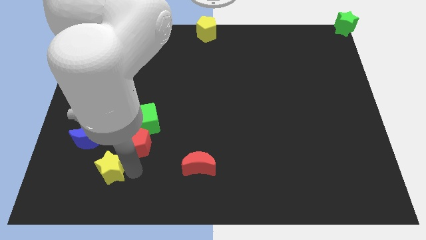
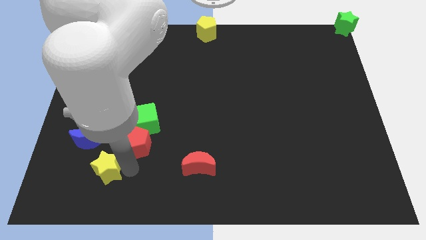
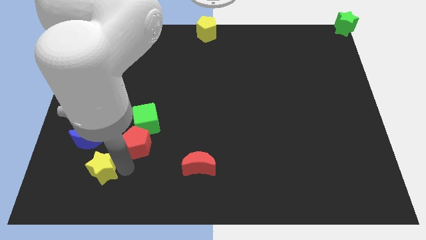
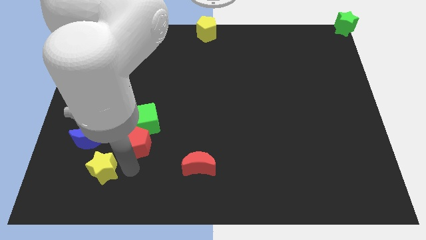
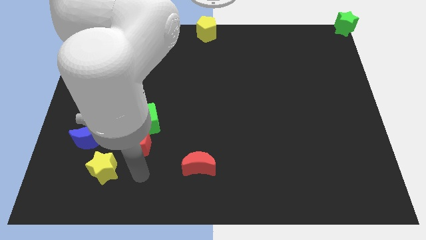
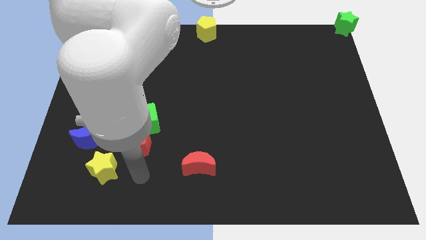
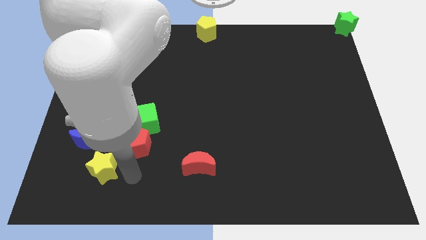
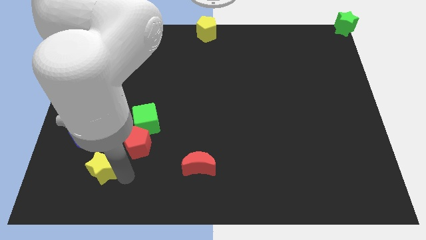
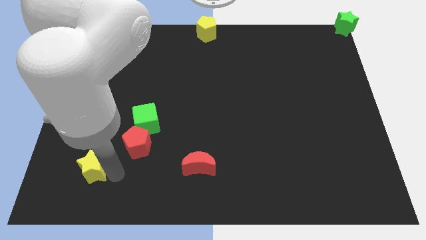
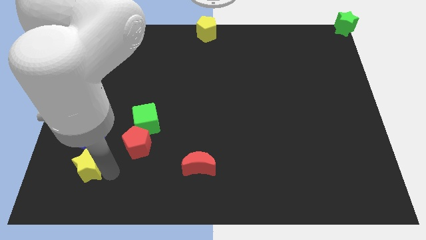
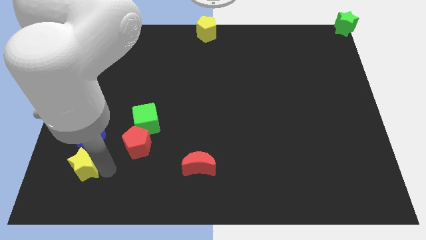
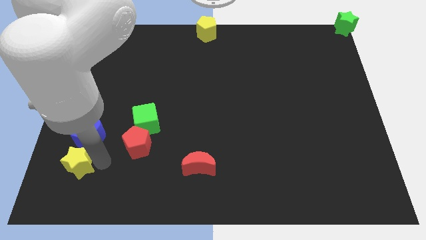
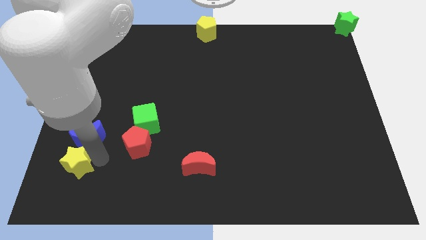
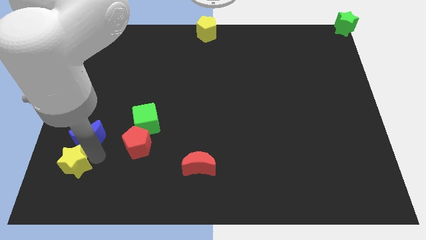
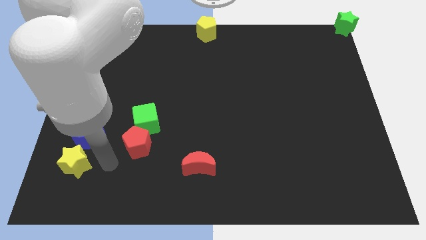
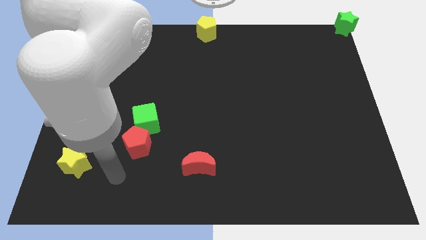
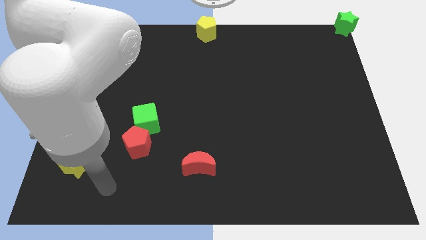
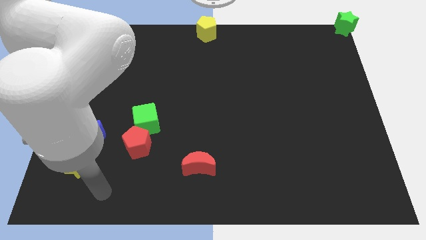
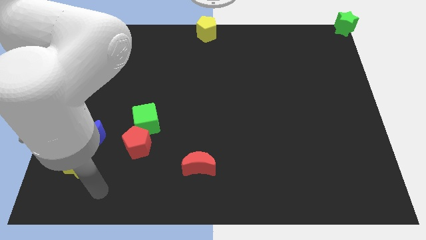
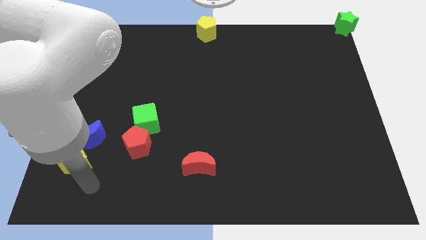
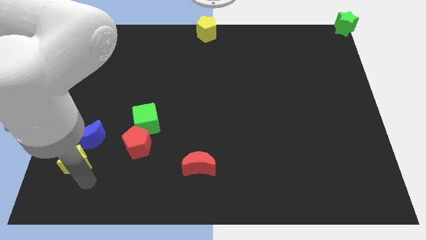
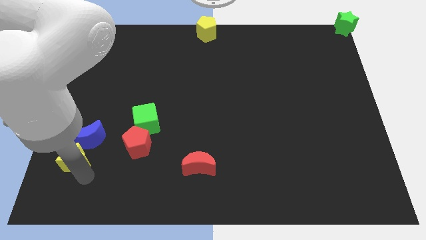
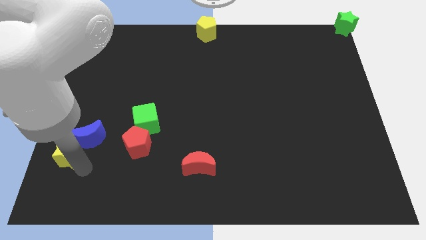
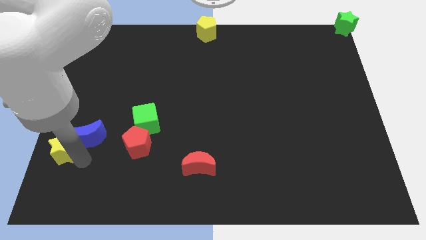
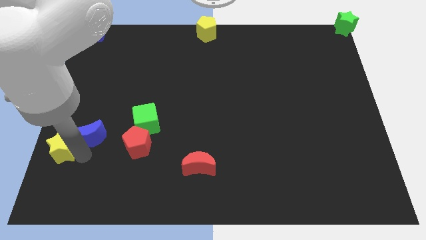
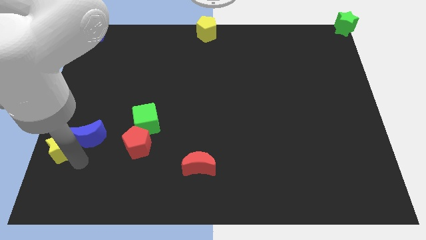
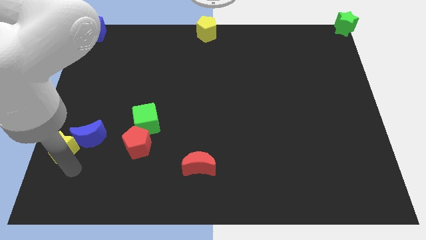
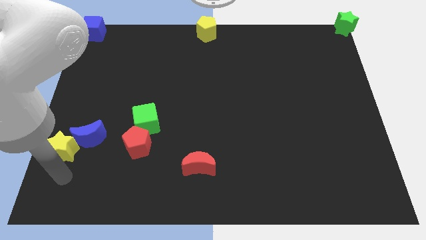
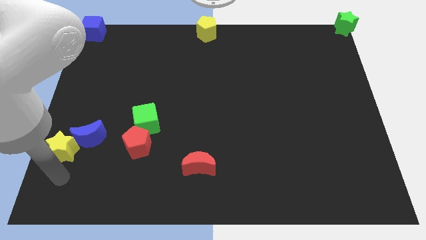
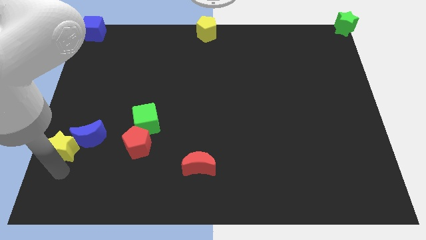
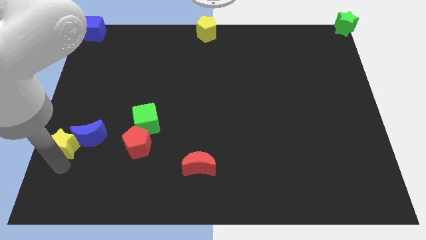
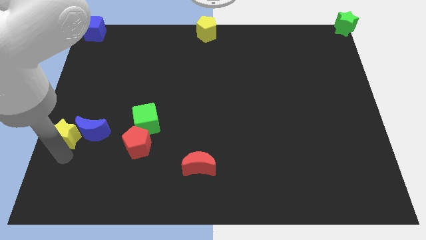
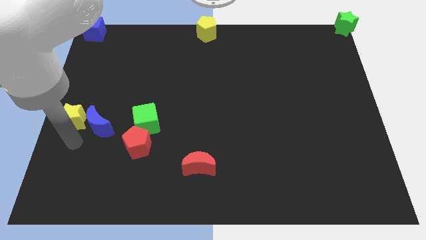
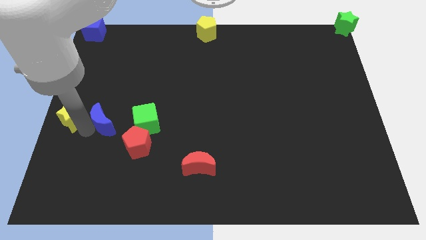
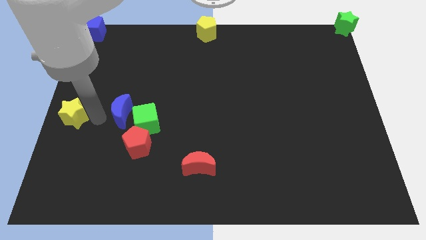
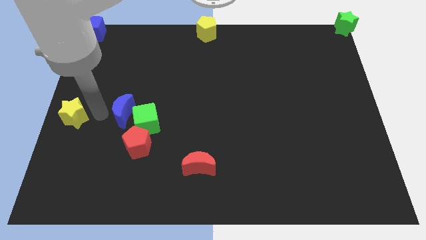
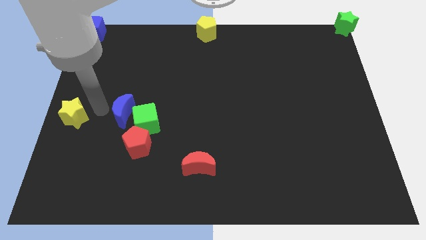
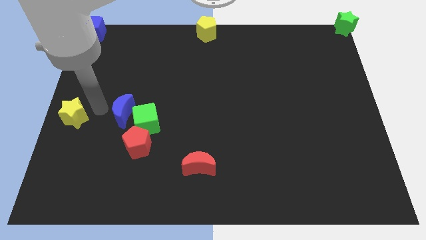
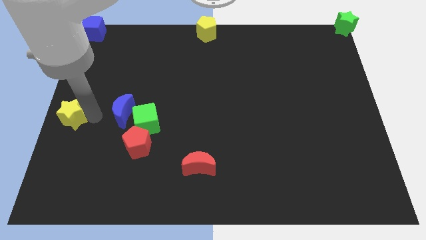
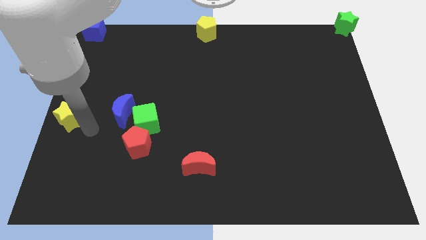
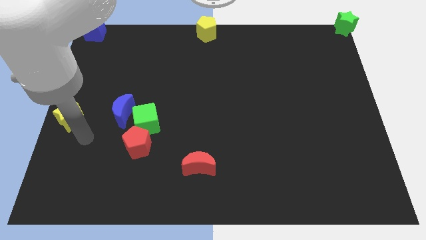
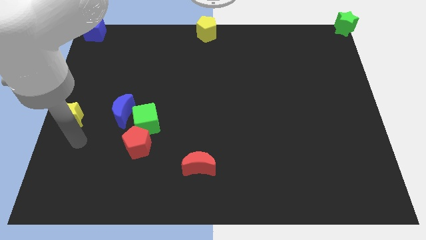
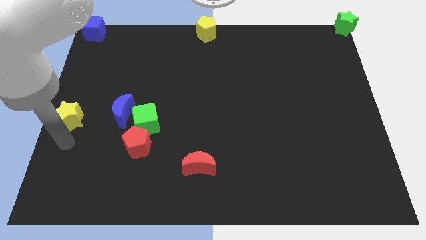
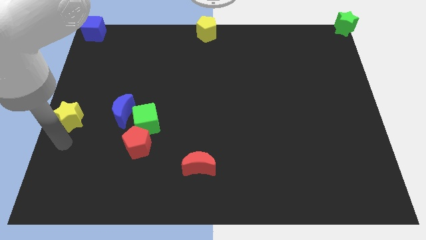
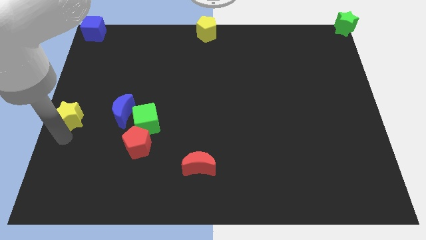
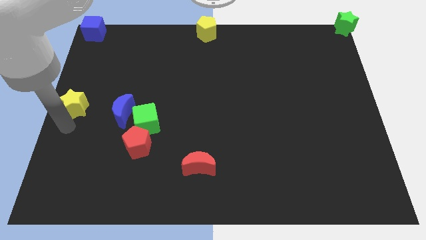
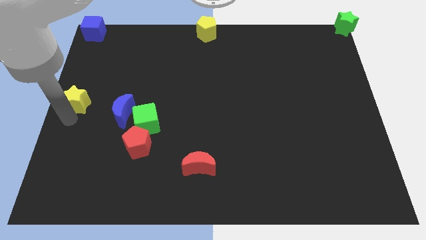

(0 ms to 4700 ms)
push the yellow star to the center left of the table

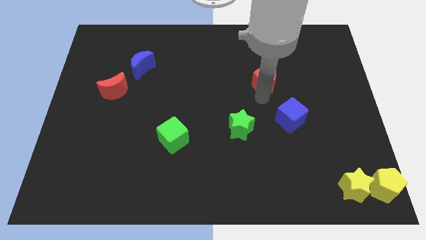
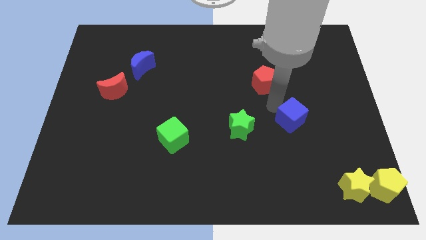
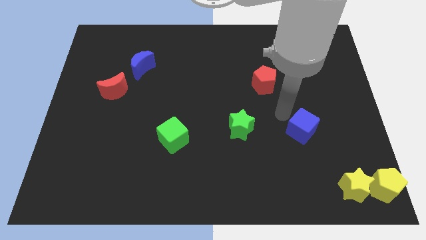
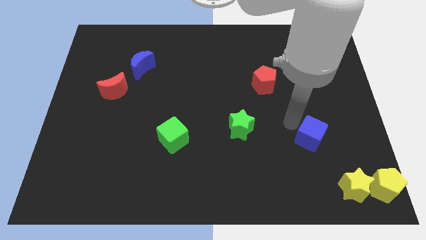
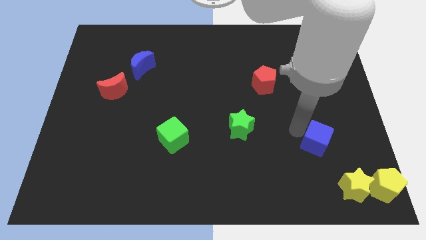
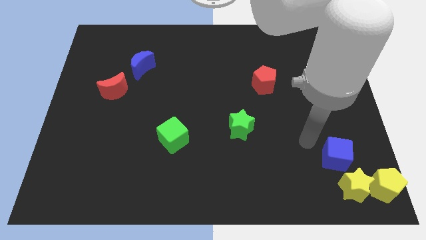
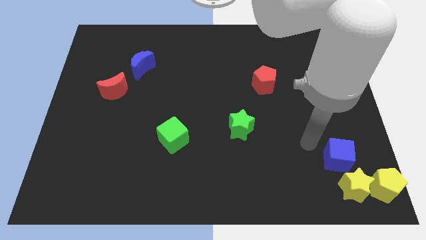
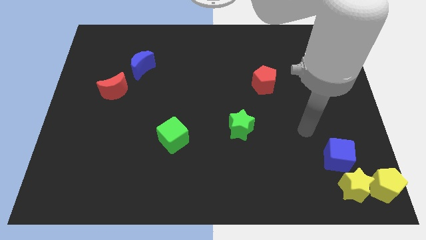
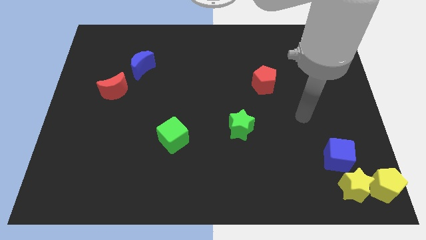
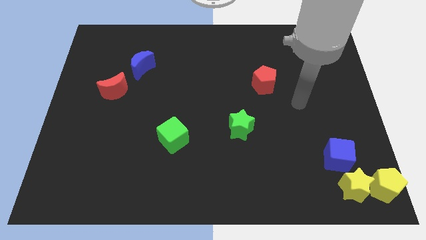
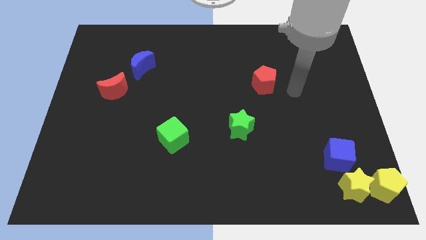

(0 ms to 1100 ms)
move the blue cube above to the yellow star

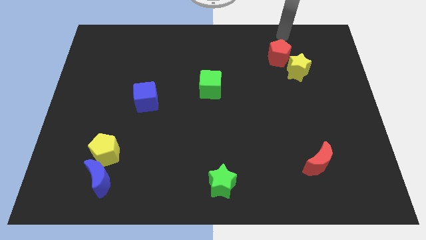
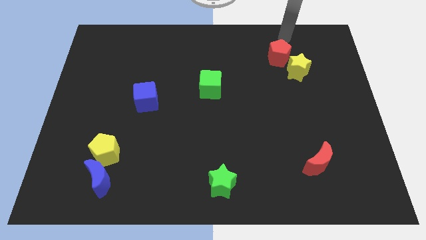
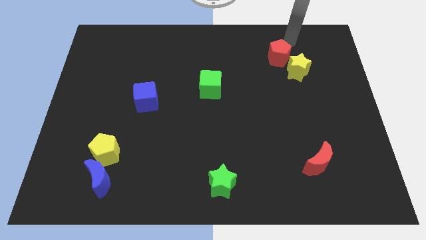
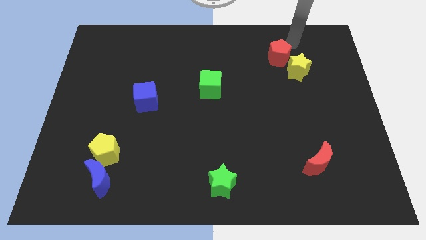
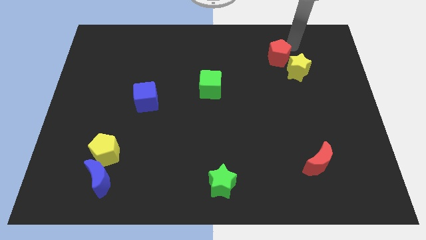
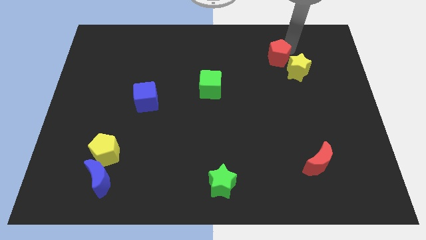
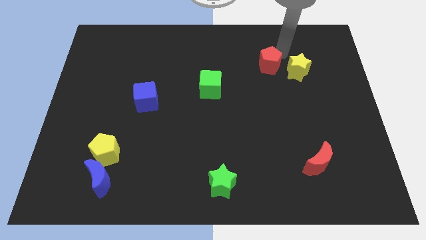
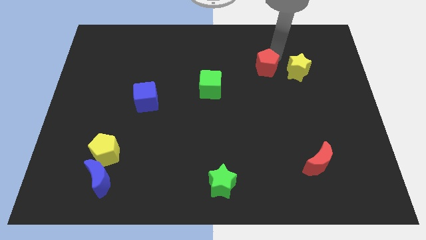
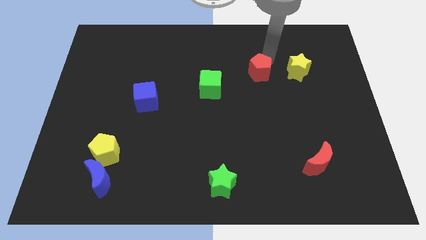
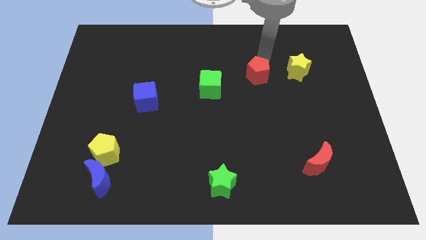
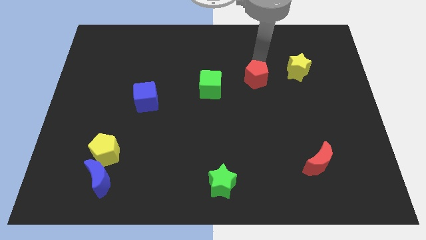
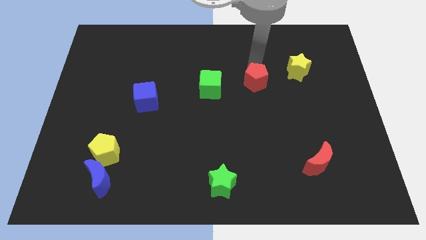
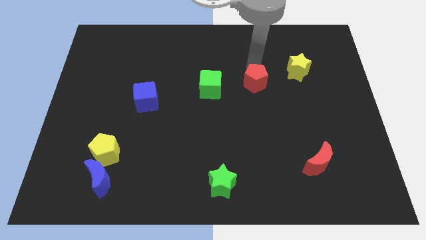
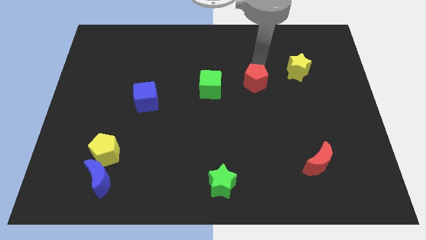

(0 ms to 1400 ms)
place the red pentagon in between the yellow star and green cube

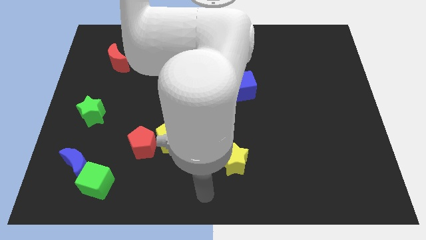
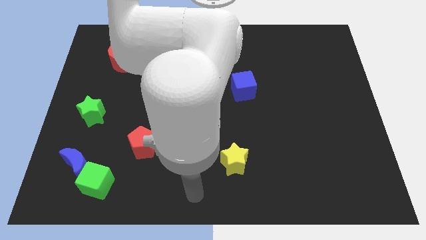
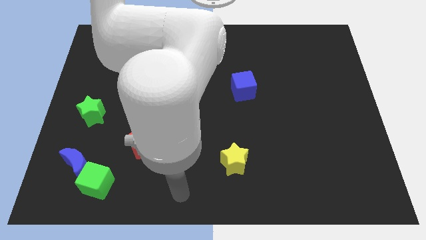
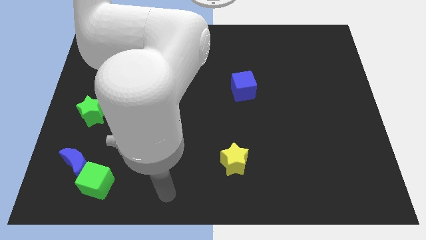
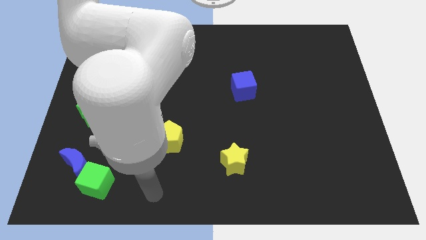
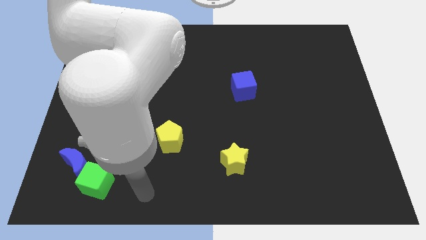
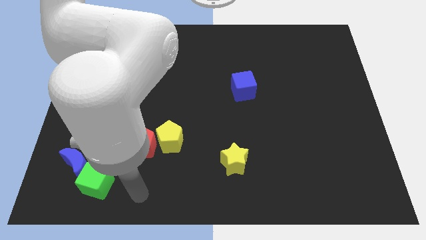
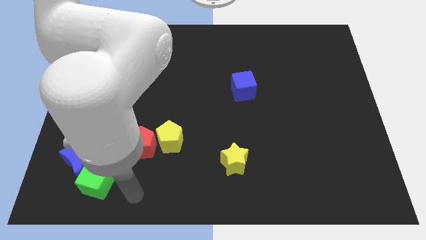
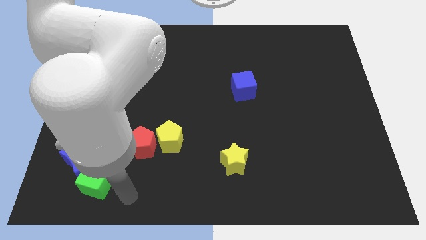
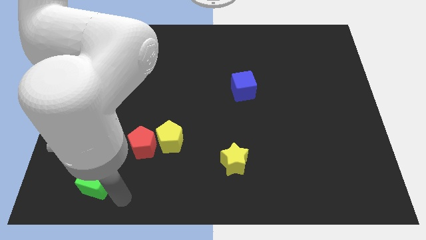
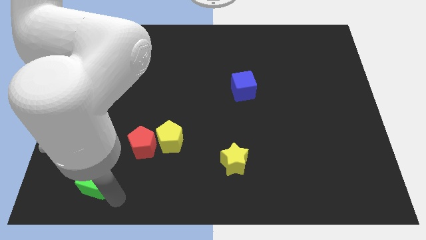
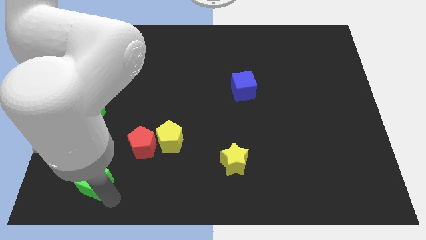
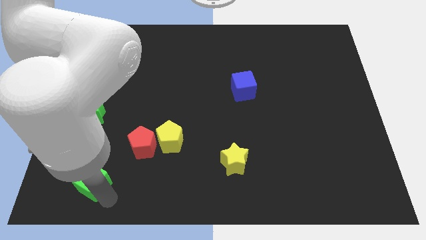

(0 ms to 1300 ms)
move your arm towards the green block

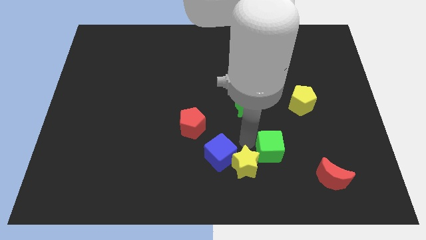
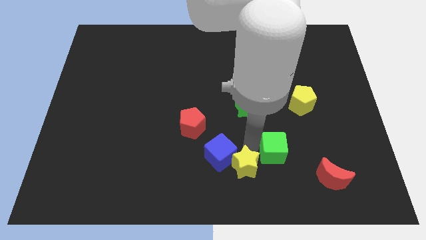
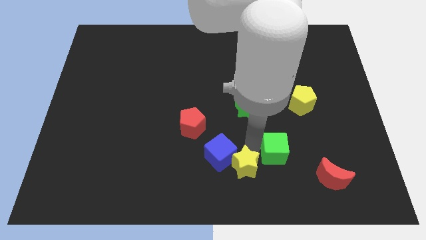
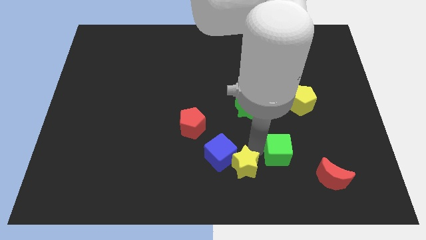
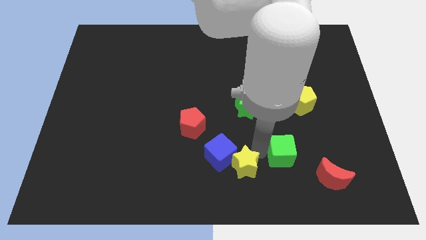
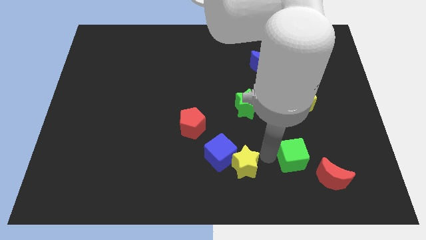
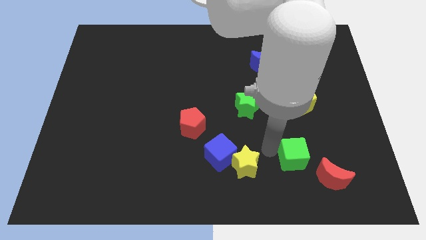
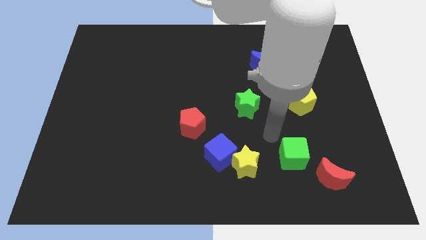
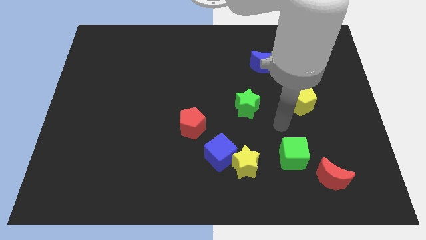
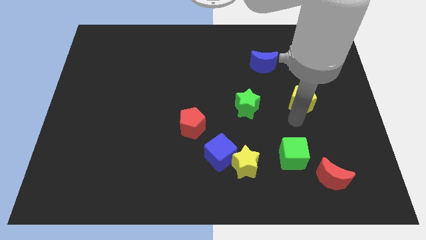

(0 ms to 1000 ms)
place green cube to the top left of the red moon
